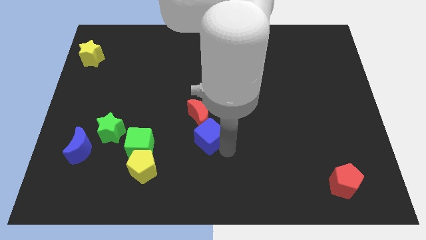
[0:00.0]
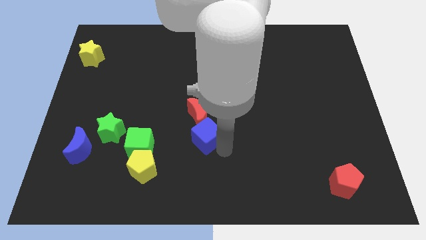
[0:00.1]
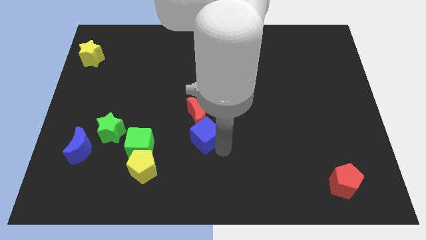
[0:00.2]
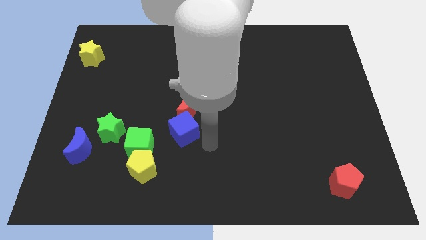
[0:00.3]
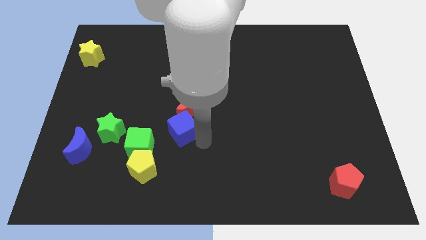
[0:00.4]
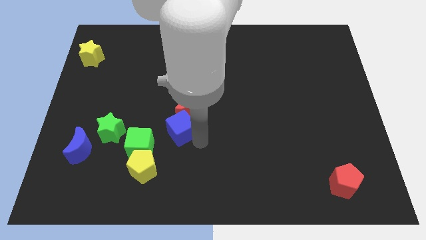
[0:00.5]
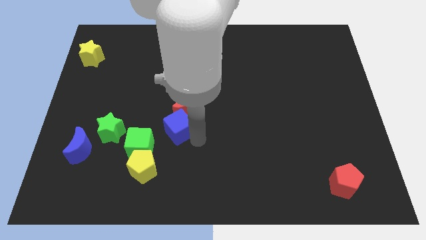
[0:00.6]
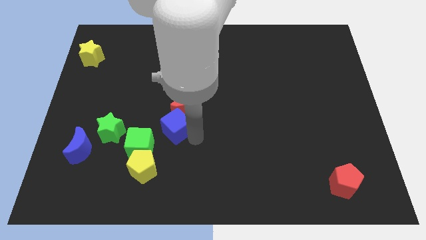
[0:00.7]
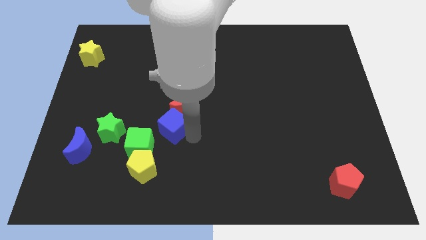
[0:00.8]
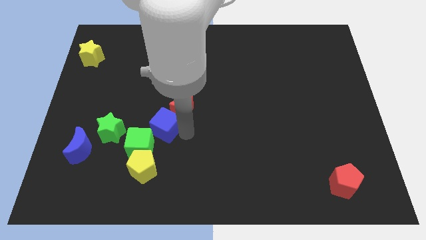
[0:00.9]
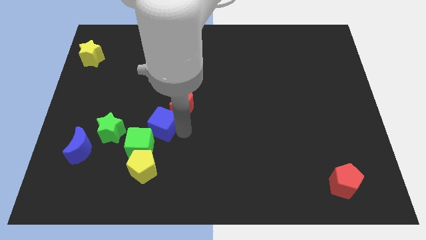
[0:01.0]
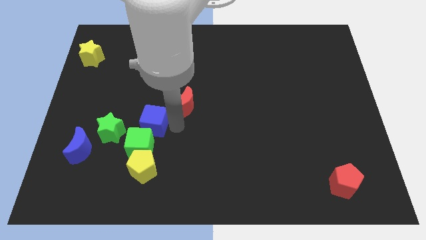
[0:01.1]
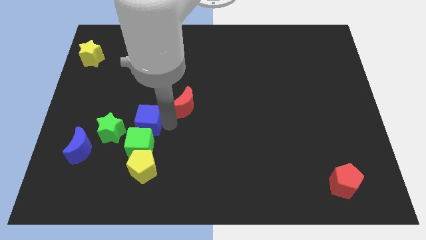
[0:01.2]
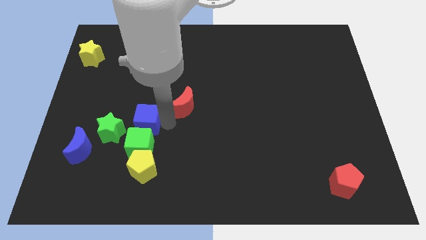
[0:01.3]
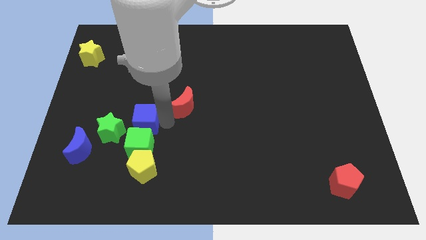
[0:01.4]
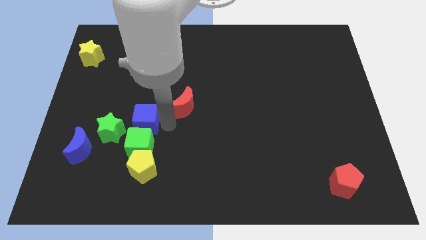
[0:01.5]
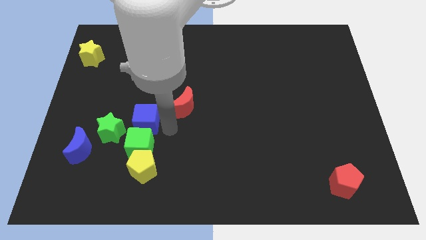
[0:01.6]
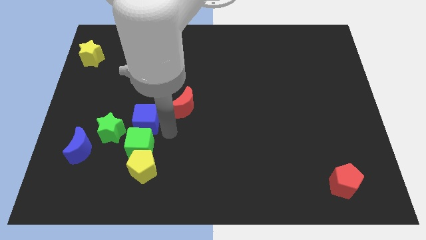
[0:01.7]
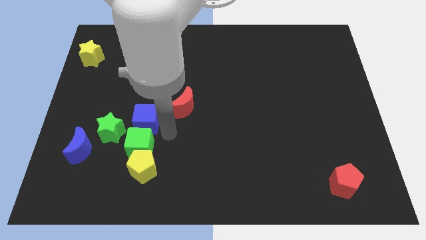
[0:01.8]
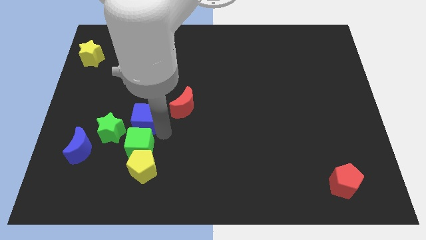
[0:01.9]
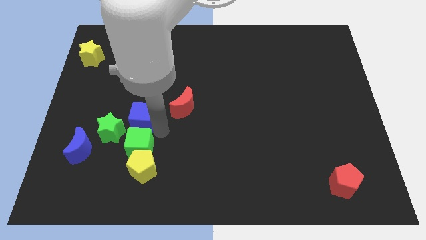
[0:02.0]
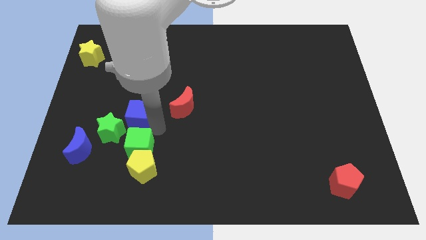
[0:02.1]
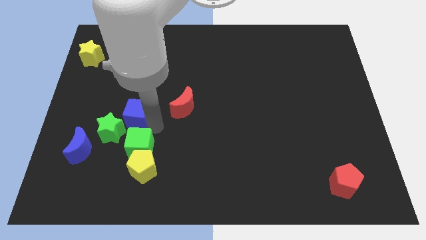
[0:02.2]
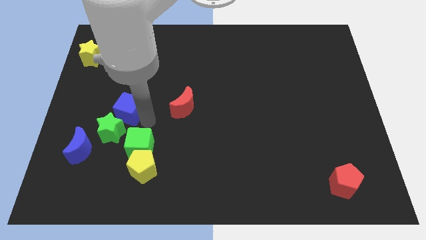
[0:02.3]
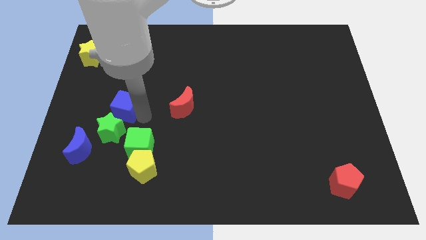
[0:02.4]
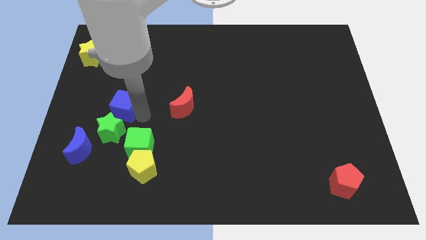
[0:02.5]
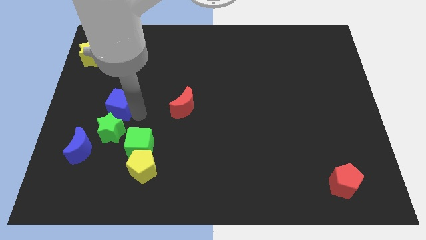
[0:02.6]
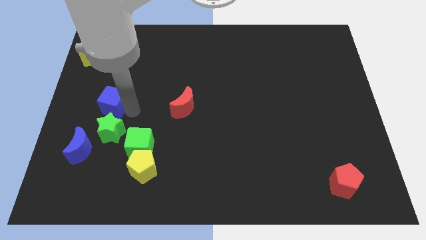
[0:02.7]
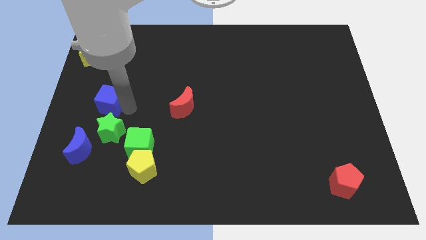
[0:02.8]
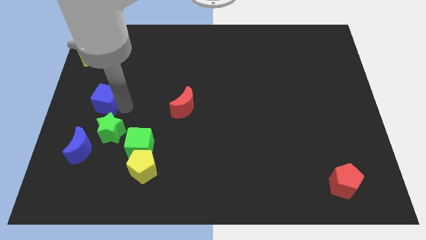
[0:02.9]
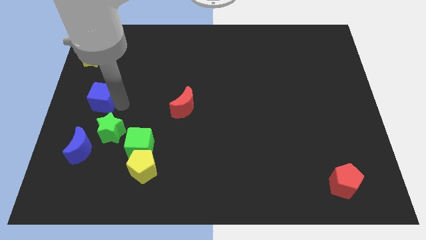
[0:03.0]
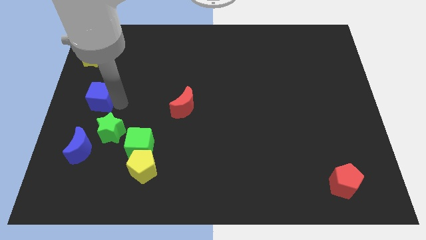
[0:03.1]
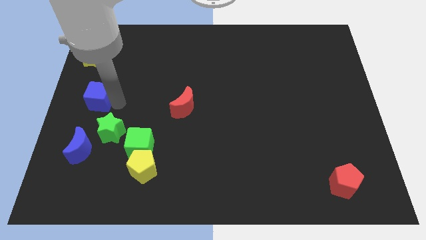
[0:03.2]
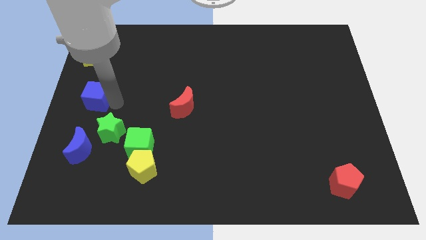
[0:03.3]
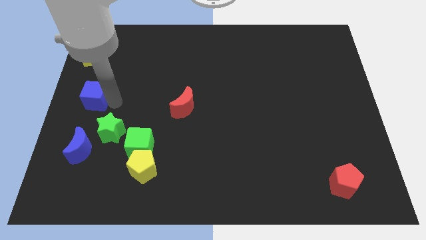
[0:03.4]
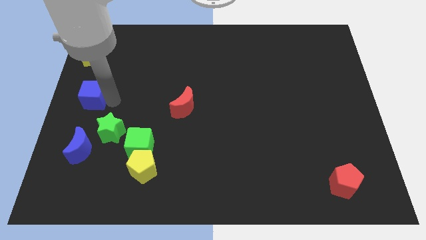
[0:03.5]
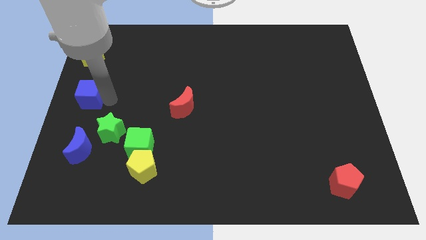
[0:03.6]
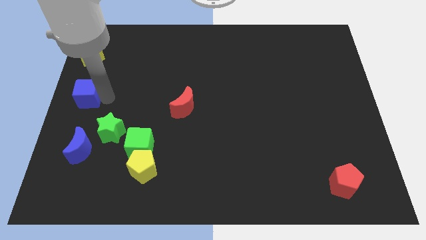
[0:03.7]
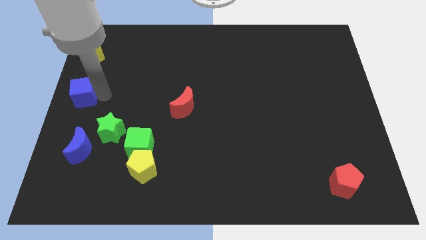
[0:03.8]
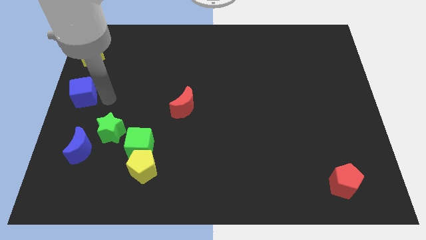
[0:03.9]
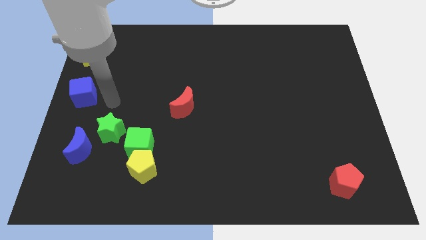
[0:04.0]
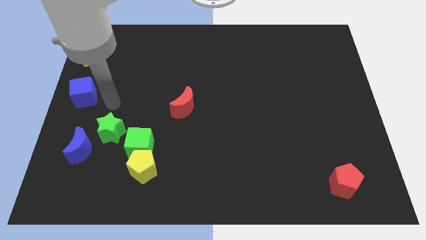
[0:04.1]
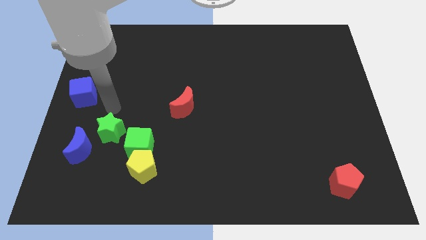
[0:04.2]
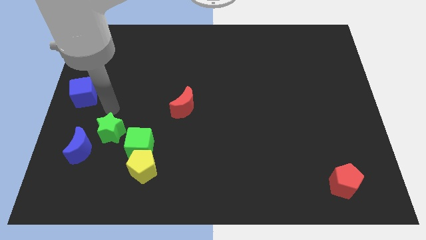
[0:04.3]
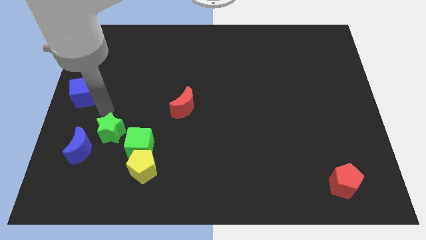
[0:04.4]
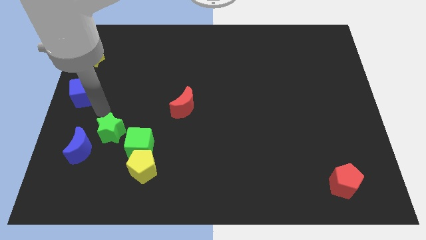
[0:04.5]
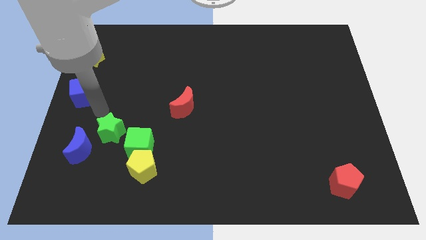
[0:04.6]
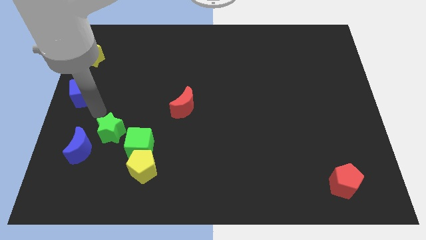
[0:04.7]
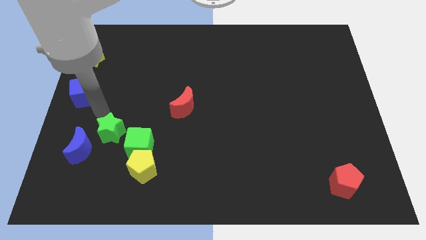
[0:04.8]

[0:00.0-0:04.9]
move the blue cube to the center left of the board

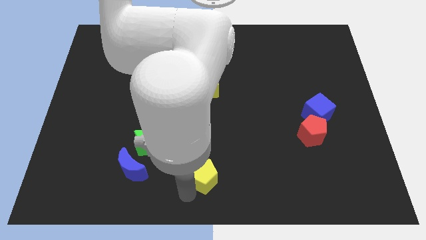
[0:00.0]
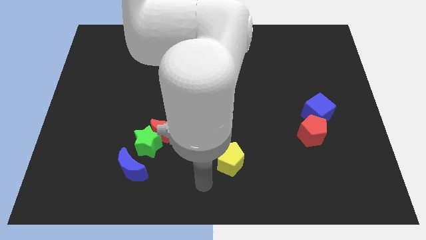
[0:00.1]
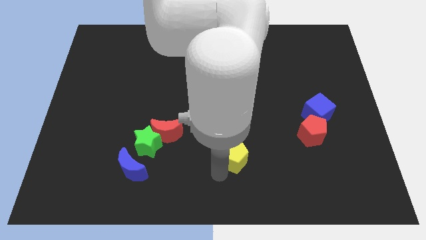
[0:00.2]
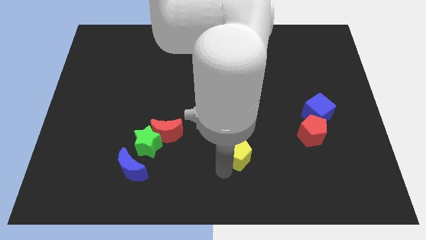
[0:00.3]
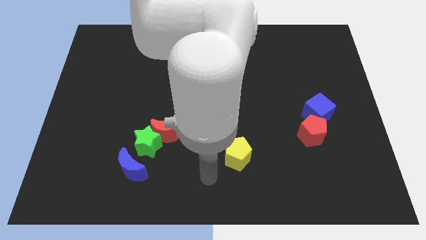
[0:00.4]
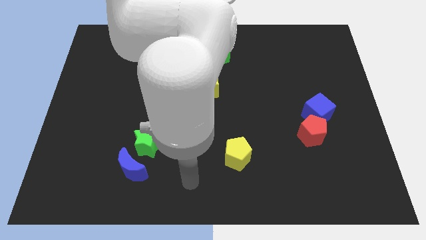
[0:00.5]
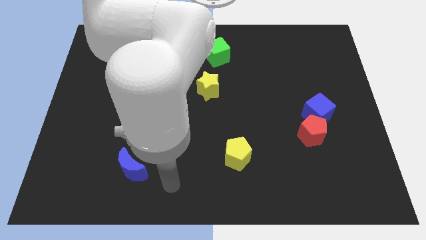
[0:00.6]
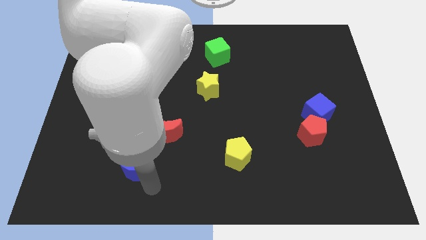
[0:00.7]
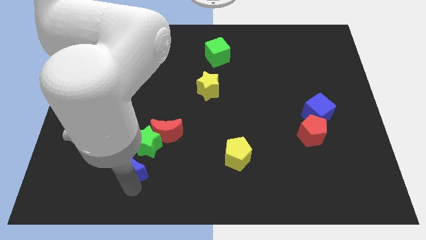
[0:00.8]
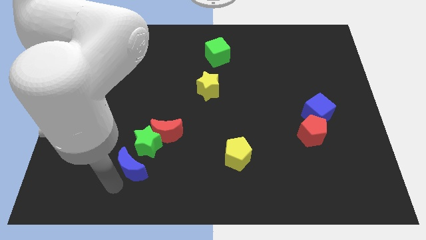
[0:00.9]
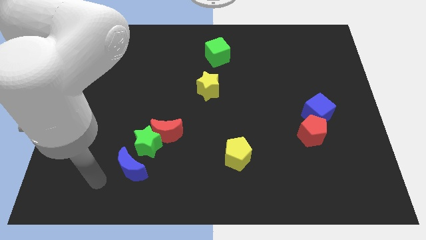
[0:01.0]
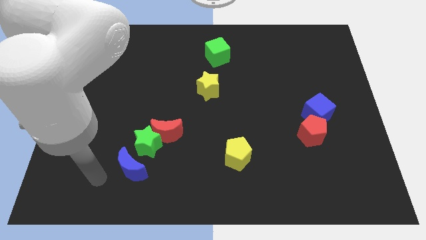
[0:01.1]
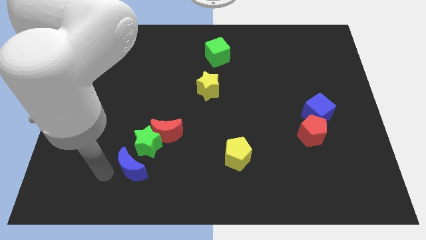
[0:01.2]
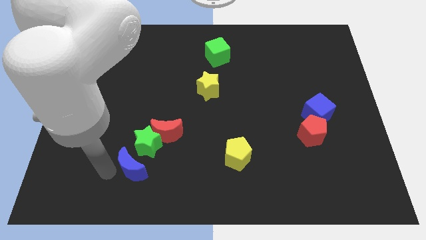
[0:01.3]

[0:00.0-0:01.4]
push the yellow pentagon horizontal right to the green star

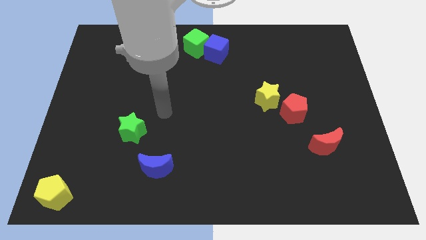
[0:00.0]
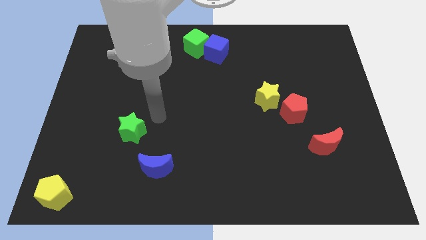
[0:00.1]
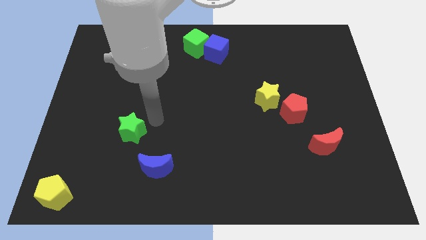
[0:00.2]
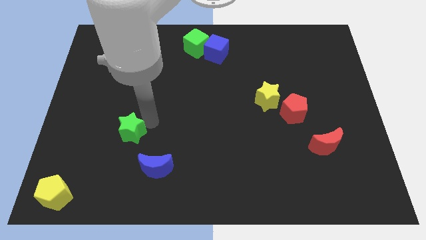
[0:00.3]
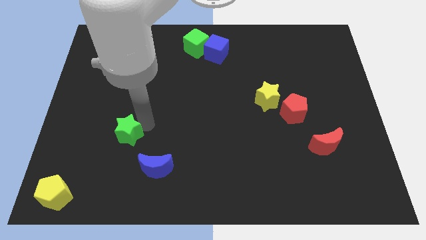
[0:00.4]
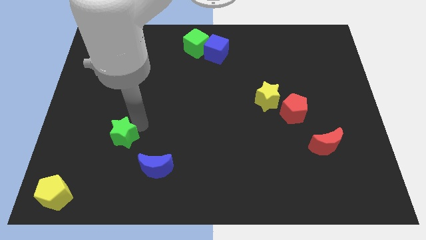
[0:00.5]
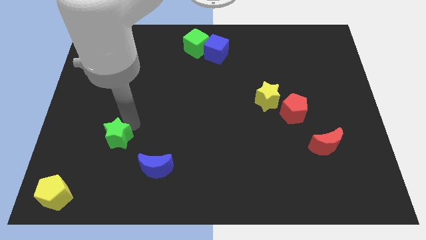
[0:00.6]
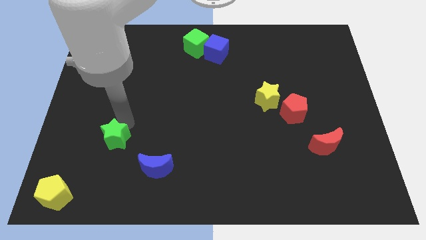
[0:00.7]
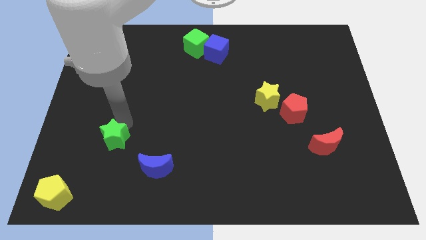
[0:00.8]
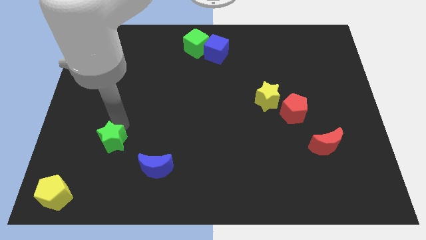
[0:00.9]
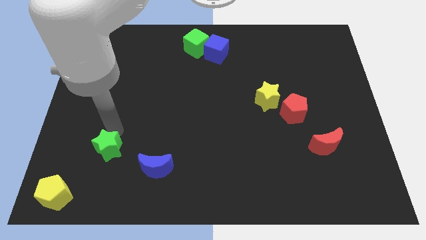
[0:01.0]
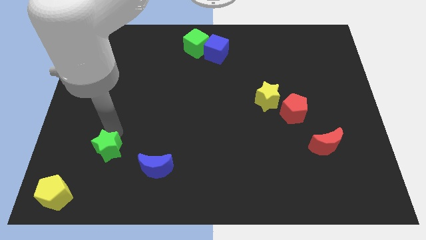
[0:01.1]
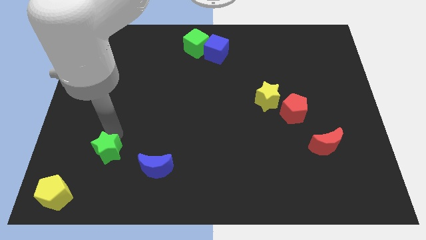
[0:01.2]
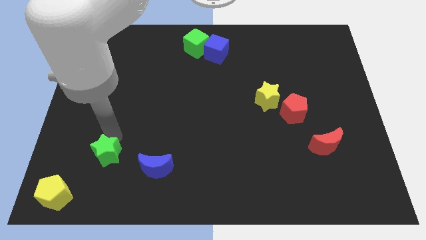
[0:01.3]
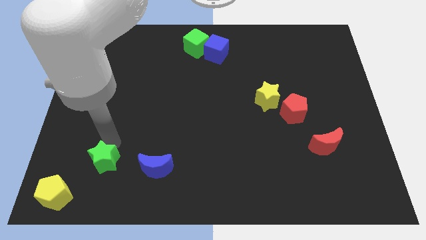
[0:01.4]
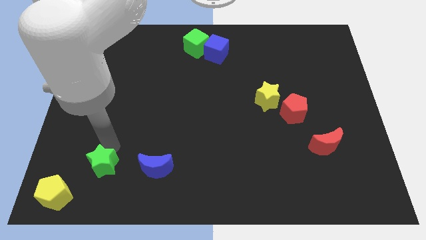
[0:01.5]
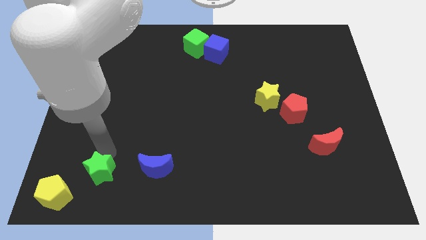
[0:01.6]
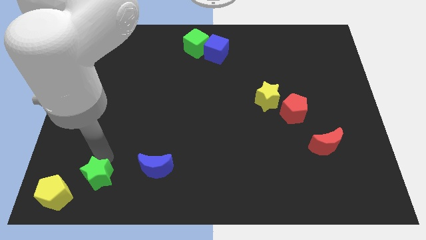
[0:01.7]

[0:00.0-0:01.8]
move green star towards yellow pentagon

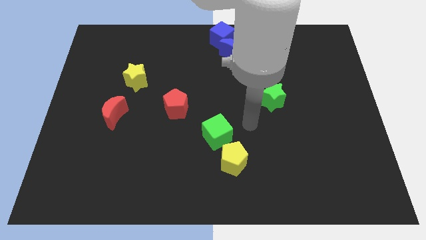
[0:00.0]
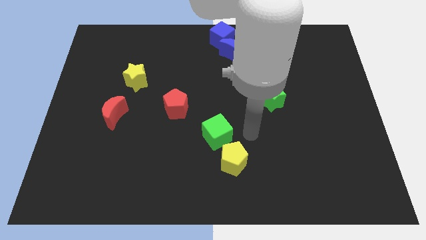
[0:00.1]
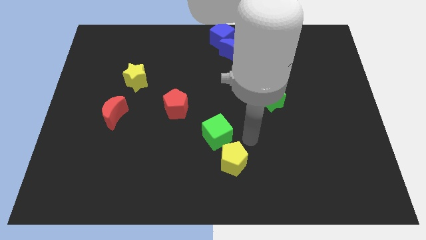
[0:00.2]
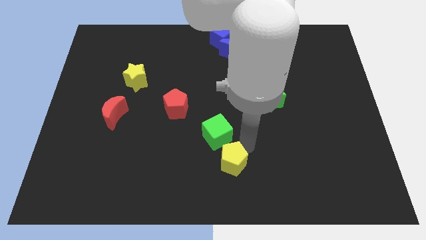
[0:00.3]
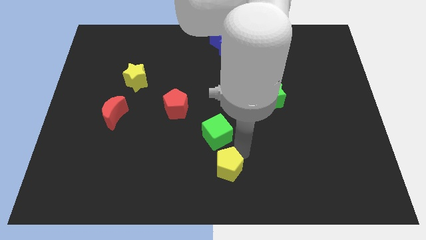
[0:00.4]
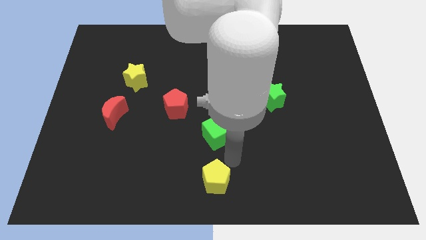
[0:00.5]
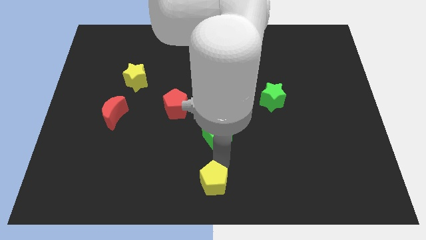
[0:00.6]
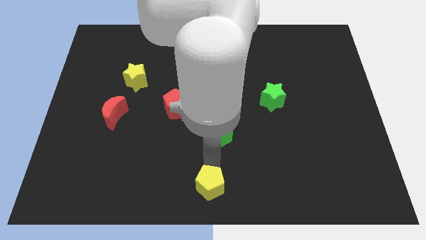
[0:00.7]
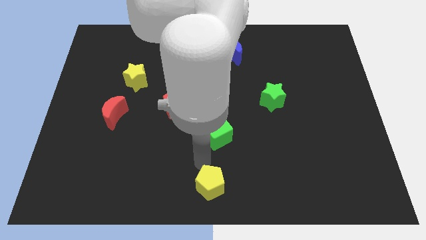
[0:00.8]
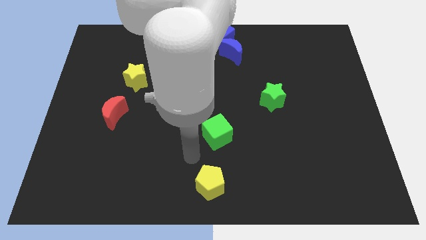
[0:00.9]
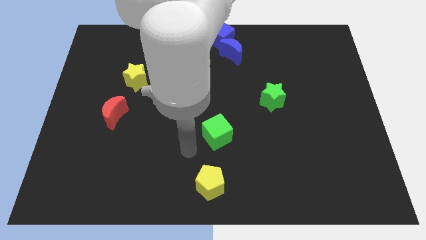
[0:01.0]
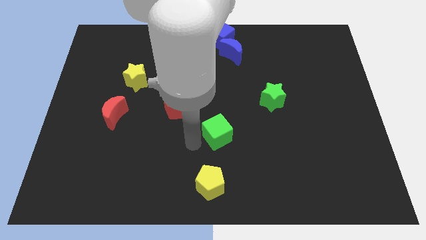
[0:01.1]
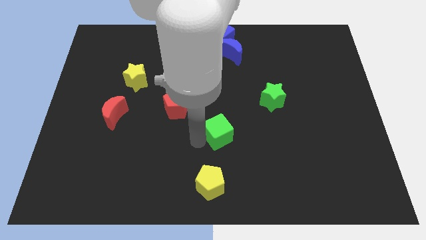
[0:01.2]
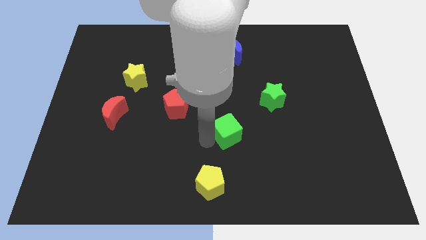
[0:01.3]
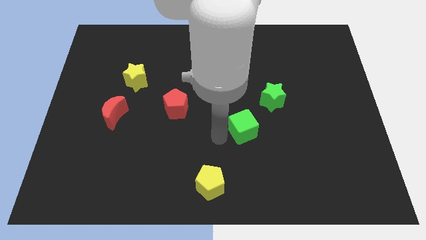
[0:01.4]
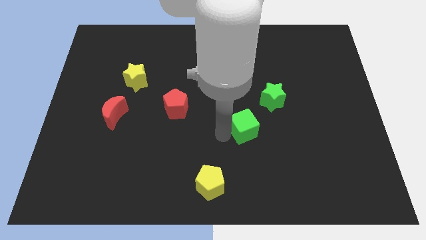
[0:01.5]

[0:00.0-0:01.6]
separate green cube and yellow pentagon
